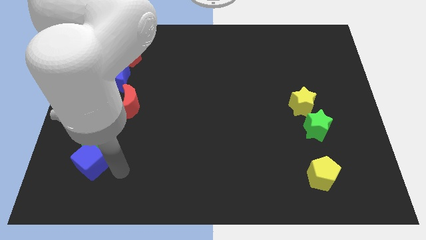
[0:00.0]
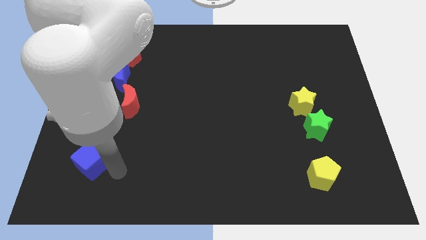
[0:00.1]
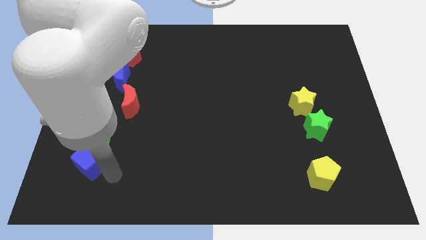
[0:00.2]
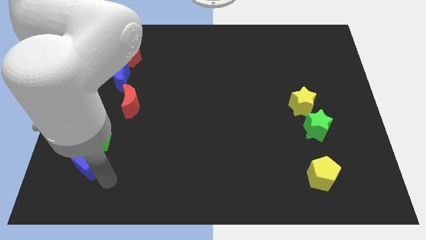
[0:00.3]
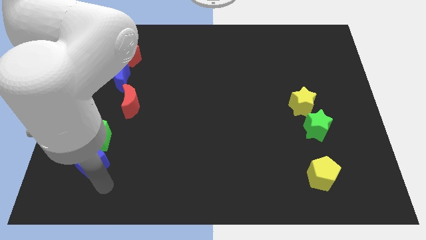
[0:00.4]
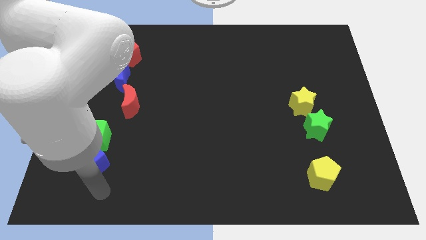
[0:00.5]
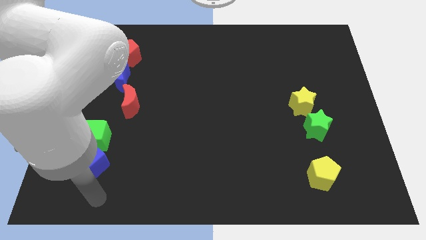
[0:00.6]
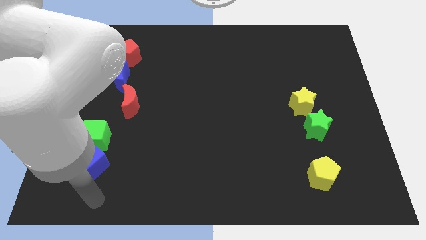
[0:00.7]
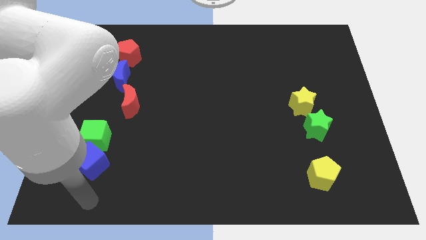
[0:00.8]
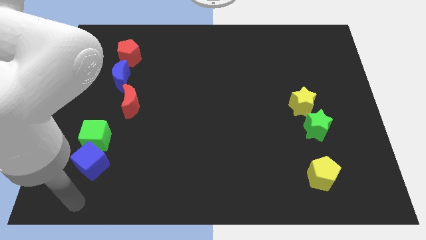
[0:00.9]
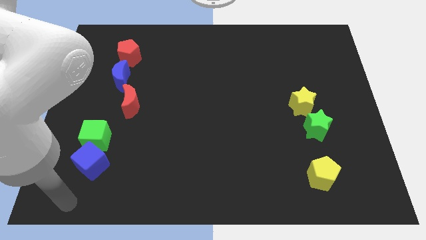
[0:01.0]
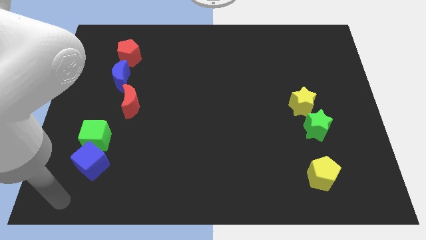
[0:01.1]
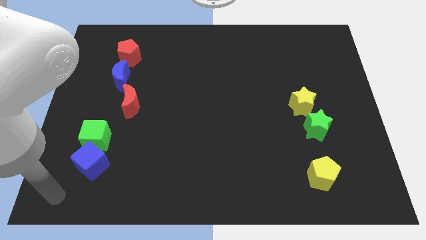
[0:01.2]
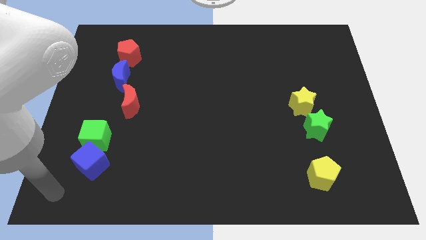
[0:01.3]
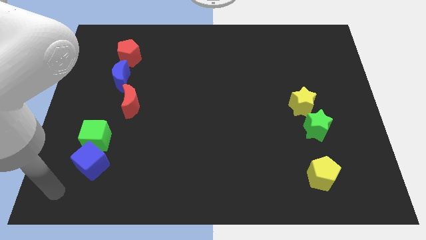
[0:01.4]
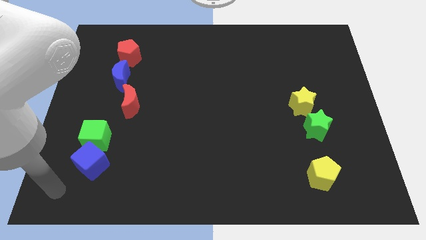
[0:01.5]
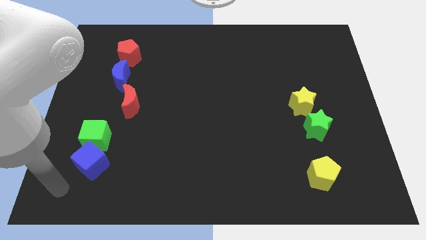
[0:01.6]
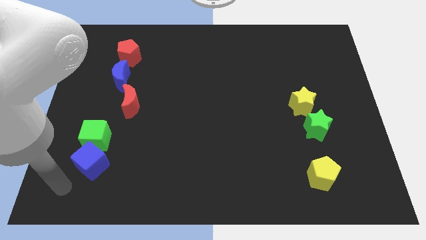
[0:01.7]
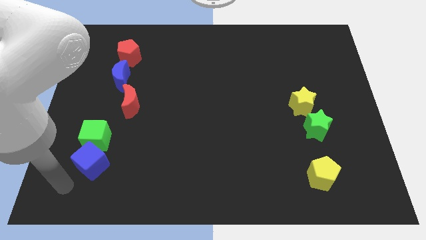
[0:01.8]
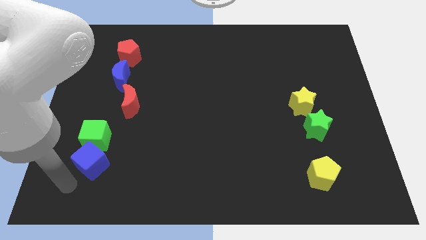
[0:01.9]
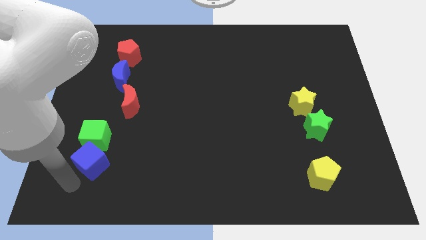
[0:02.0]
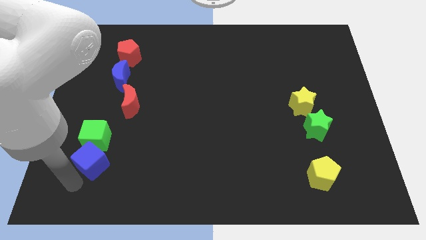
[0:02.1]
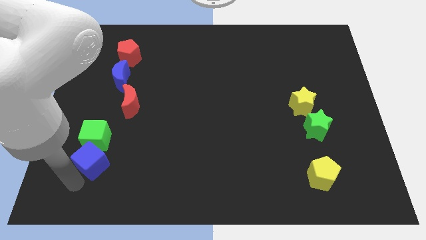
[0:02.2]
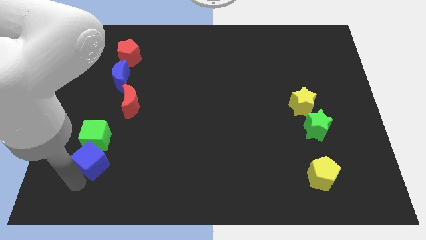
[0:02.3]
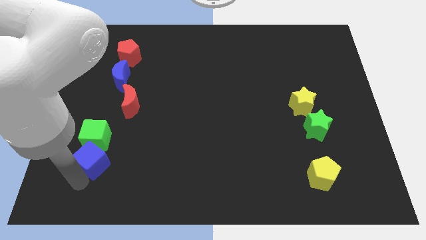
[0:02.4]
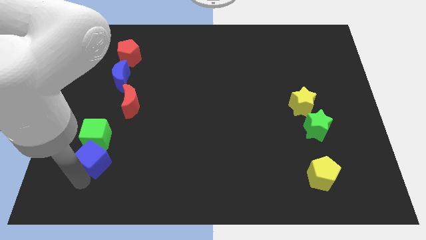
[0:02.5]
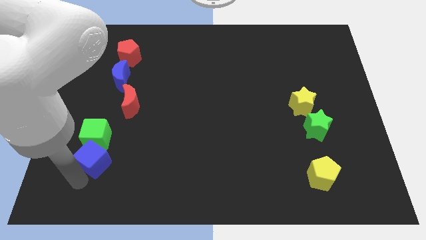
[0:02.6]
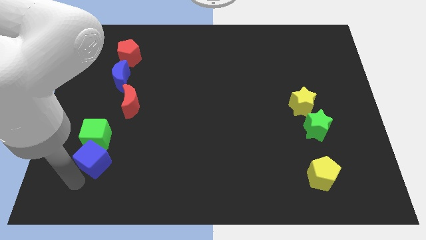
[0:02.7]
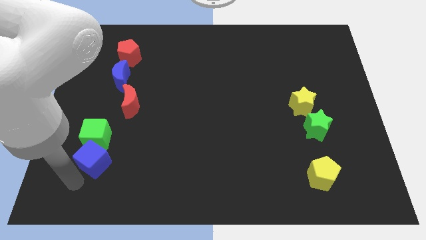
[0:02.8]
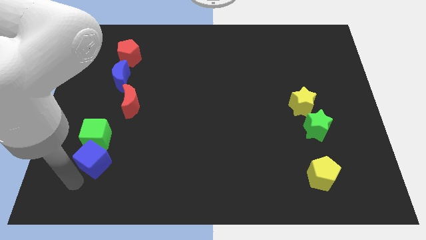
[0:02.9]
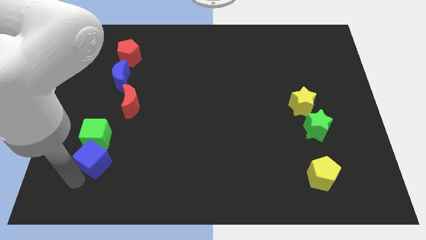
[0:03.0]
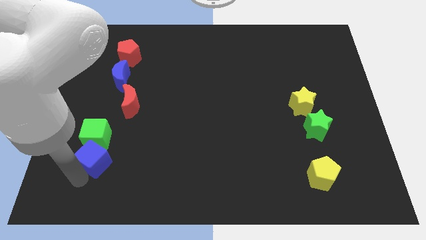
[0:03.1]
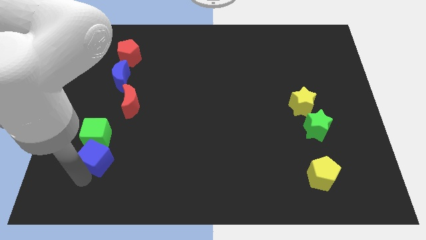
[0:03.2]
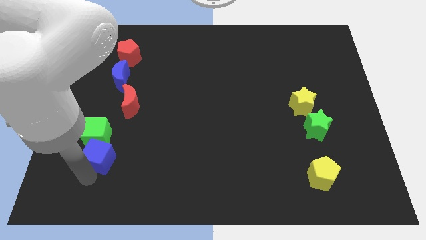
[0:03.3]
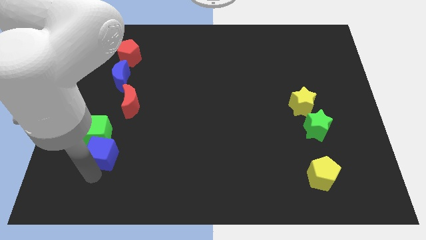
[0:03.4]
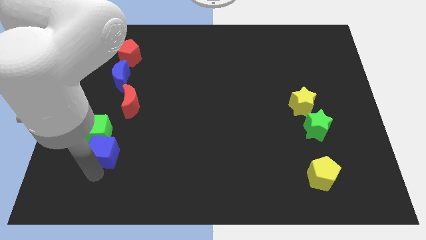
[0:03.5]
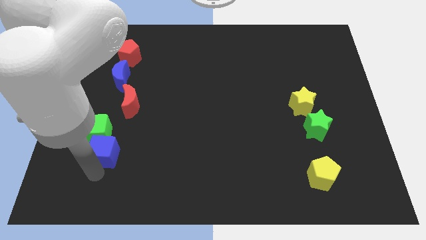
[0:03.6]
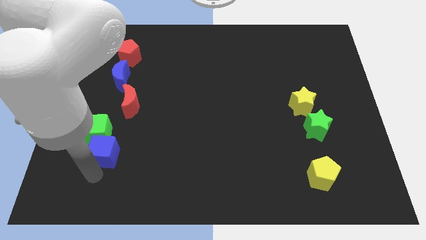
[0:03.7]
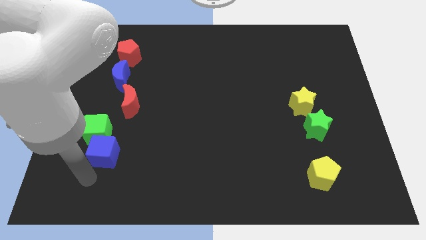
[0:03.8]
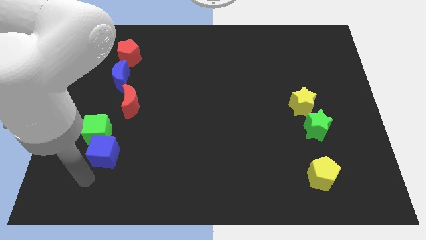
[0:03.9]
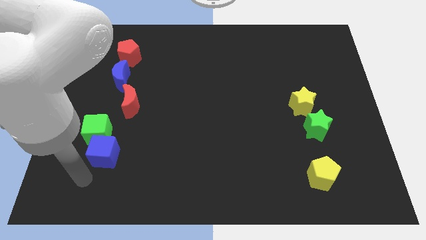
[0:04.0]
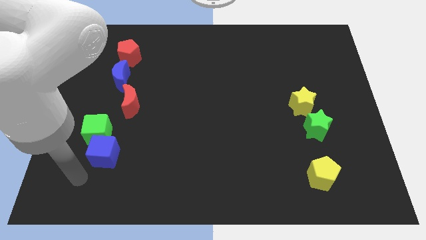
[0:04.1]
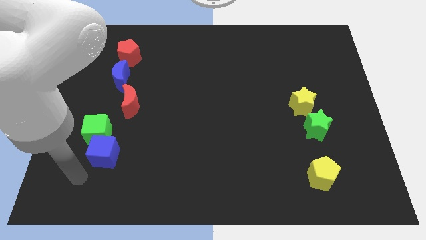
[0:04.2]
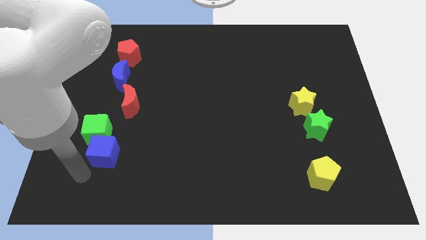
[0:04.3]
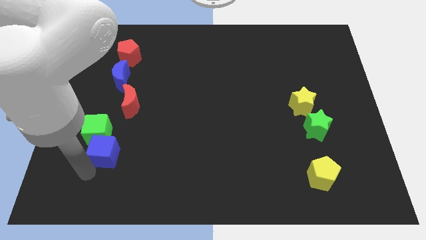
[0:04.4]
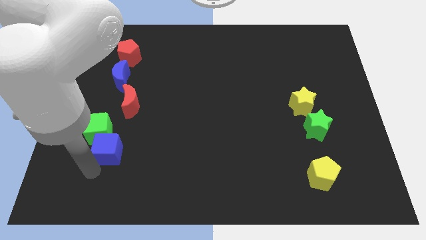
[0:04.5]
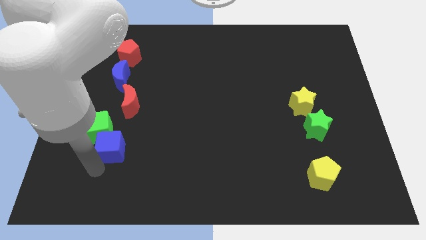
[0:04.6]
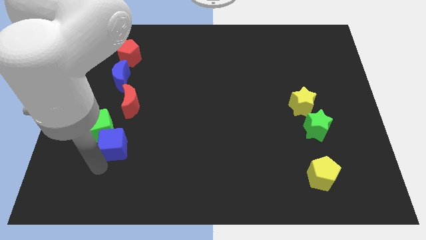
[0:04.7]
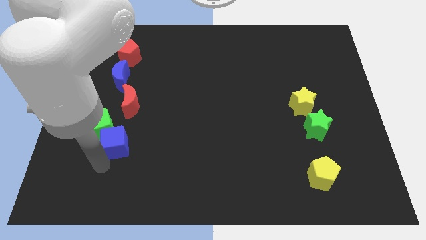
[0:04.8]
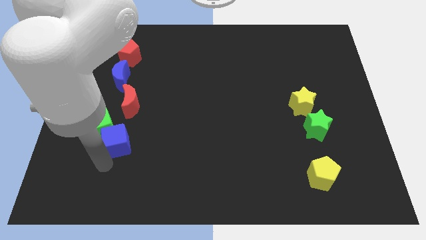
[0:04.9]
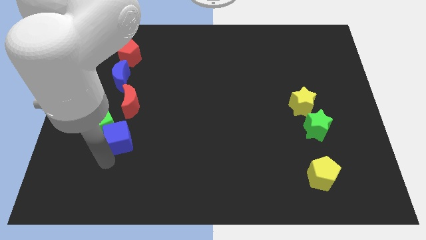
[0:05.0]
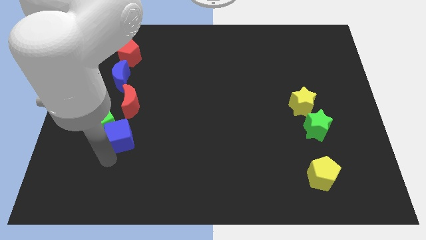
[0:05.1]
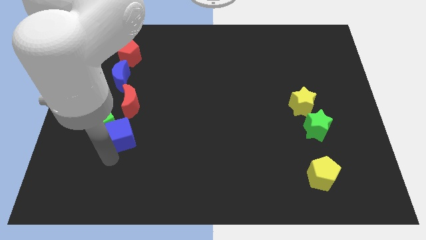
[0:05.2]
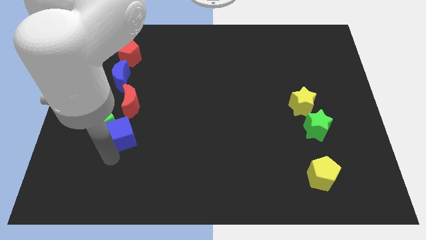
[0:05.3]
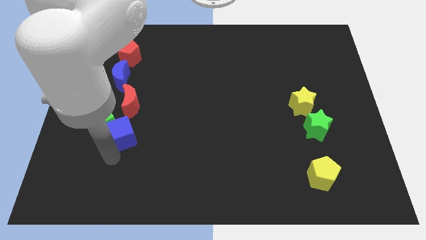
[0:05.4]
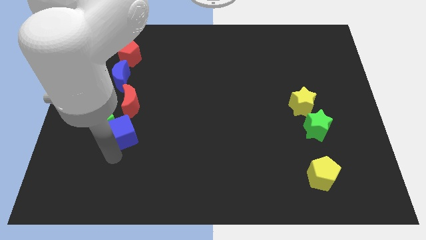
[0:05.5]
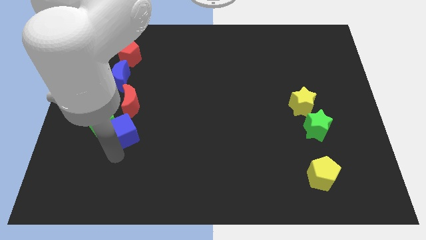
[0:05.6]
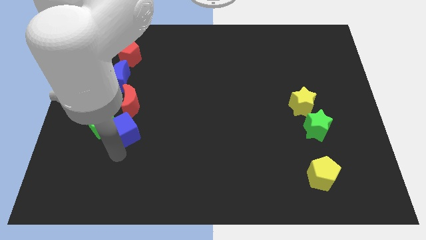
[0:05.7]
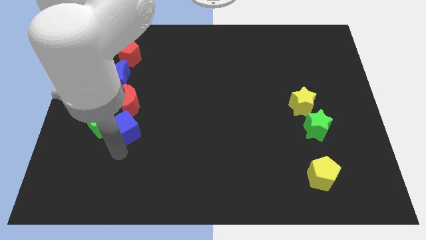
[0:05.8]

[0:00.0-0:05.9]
put the blue cube underneath the red moon

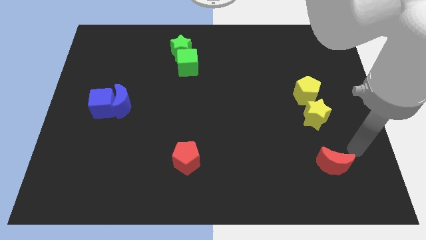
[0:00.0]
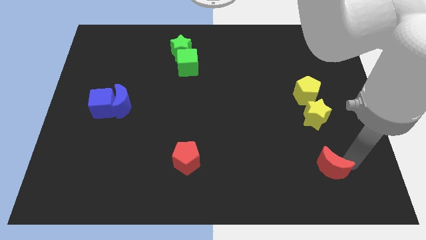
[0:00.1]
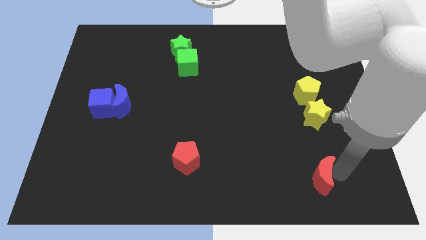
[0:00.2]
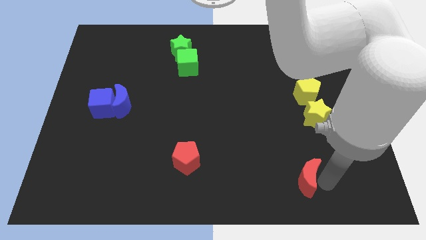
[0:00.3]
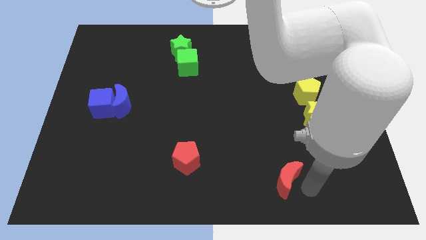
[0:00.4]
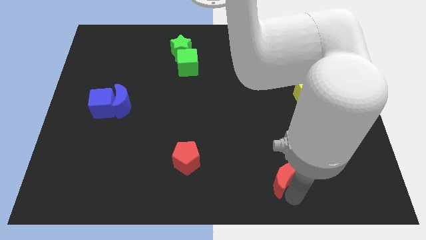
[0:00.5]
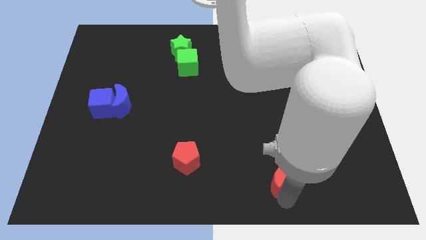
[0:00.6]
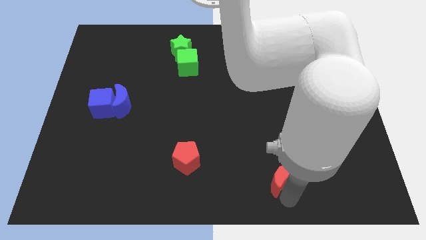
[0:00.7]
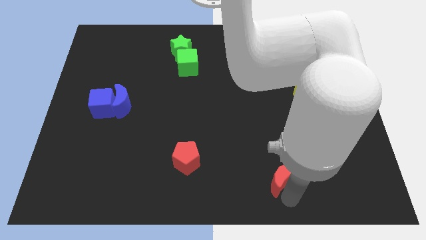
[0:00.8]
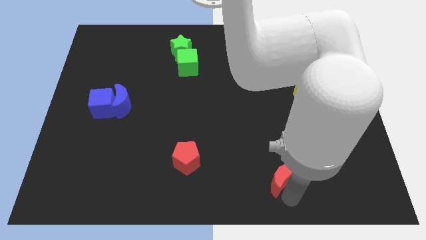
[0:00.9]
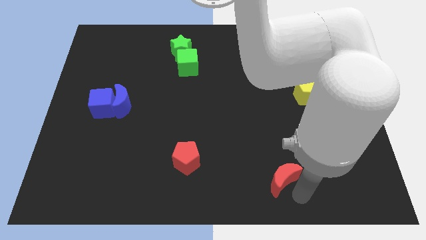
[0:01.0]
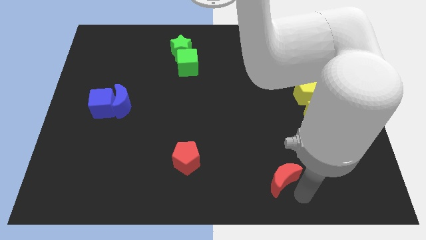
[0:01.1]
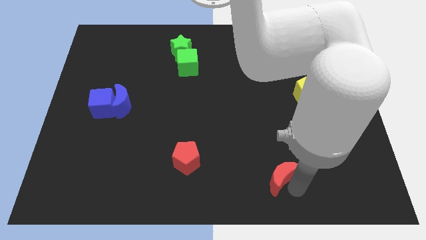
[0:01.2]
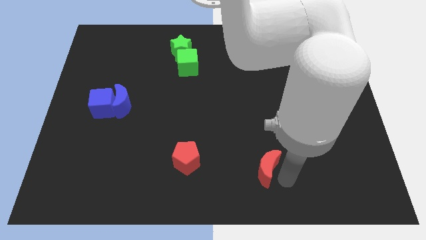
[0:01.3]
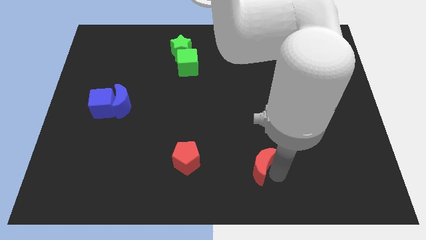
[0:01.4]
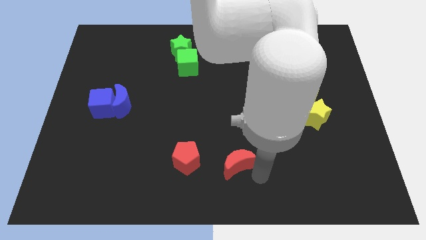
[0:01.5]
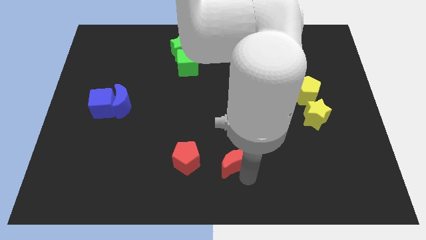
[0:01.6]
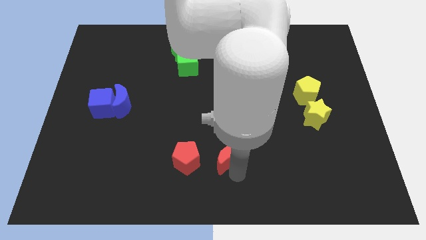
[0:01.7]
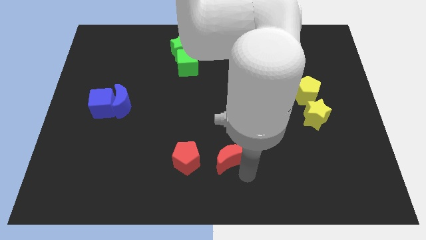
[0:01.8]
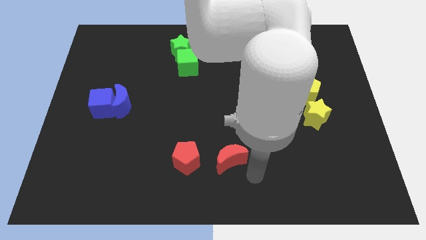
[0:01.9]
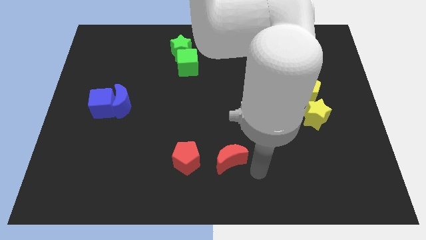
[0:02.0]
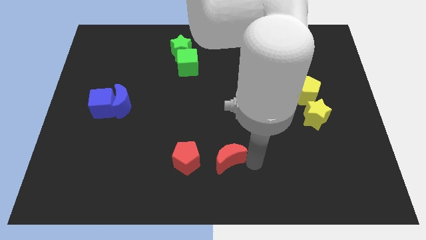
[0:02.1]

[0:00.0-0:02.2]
place red moon to the right of red pentagon

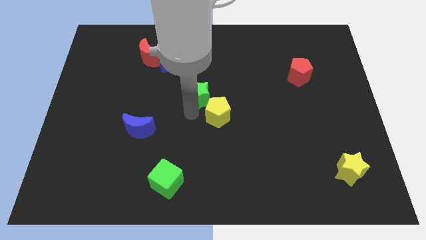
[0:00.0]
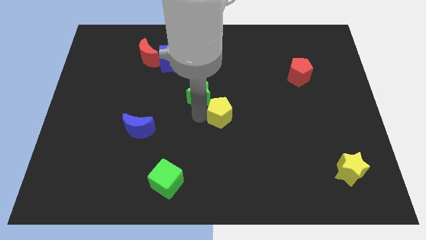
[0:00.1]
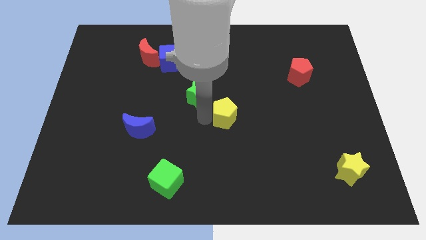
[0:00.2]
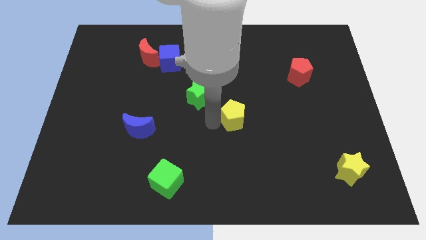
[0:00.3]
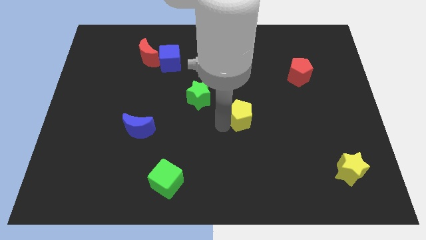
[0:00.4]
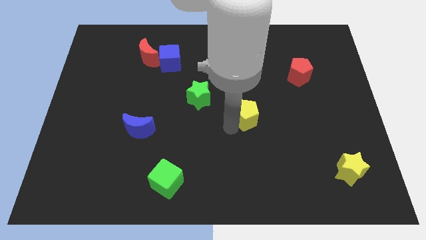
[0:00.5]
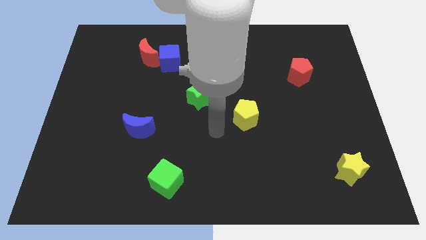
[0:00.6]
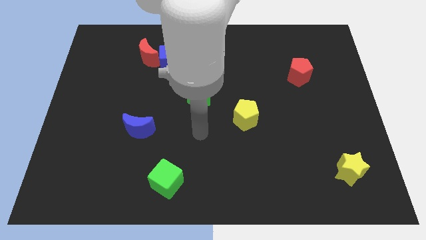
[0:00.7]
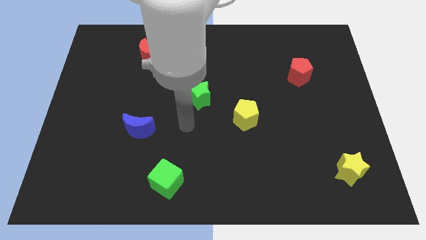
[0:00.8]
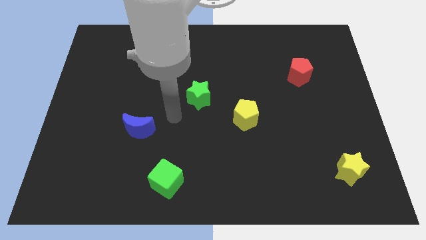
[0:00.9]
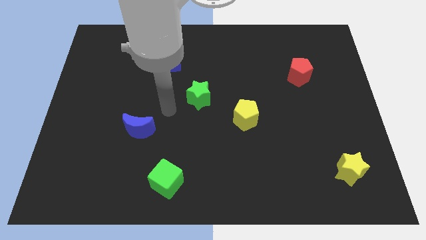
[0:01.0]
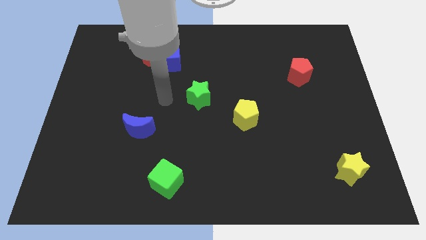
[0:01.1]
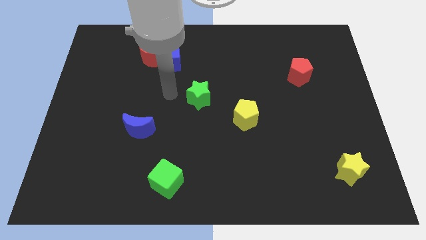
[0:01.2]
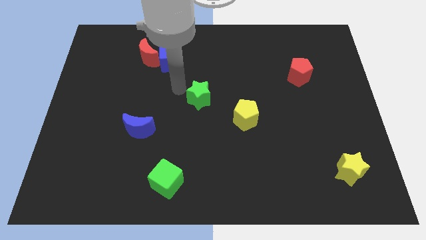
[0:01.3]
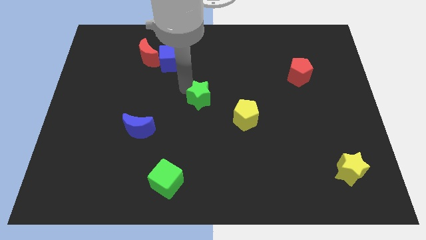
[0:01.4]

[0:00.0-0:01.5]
separate the yellow pentagon and the green star
